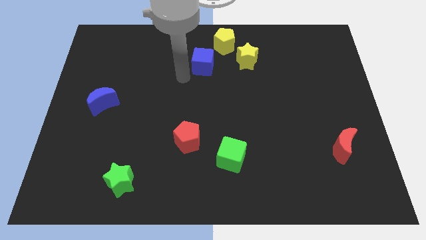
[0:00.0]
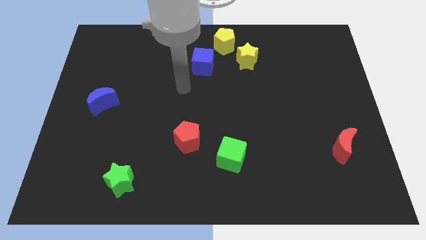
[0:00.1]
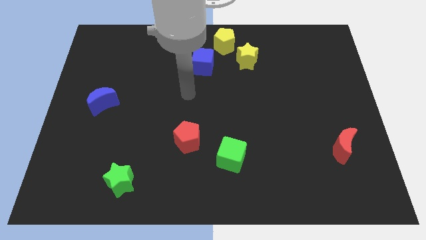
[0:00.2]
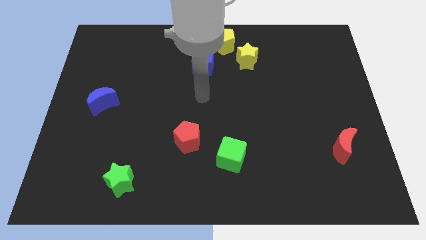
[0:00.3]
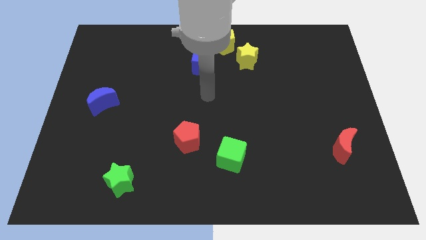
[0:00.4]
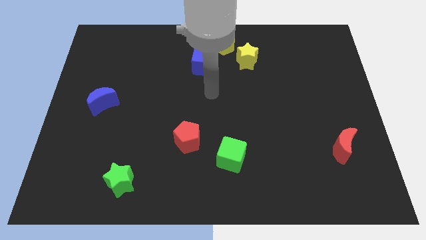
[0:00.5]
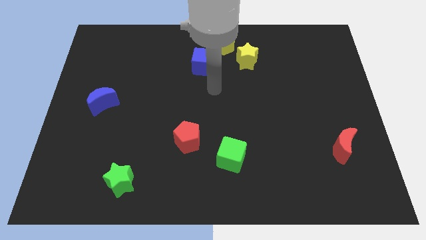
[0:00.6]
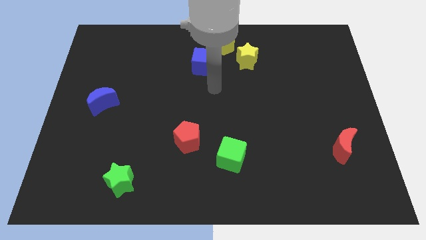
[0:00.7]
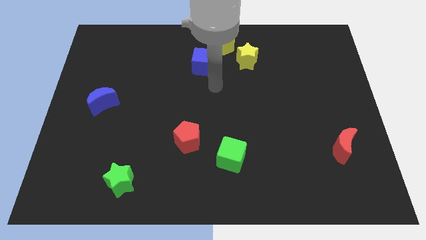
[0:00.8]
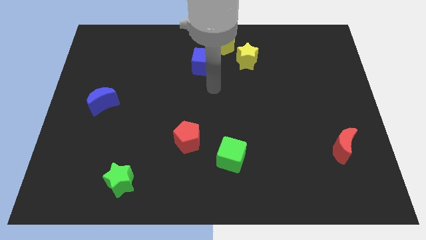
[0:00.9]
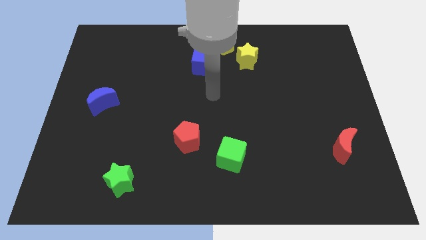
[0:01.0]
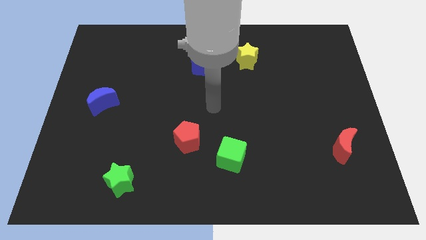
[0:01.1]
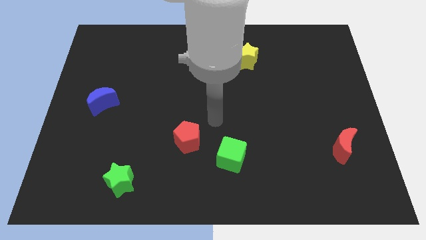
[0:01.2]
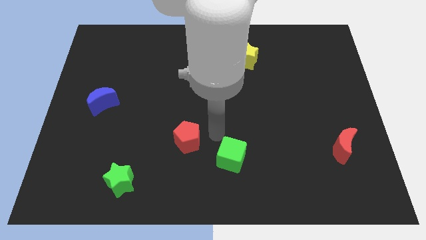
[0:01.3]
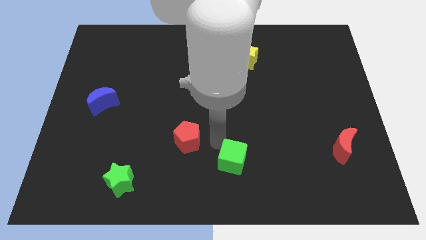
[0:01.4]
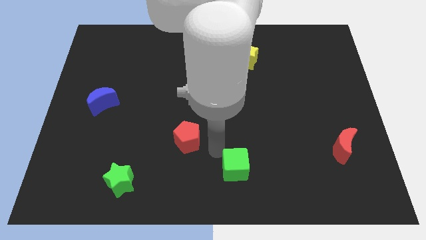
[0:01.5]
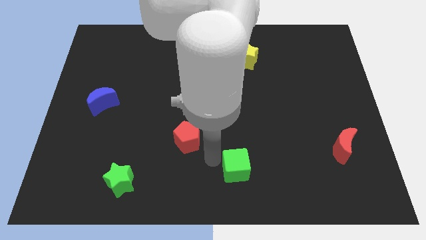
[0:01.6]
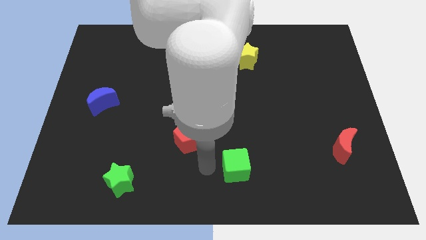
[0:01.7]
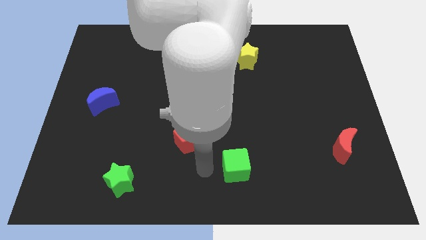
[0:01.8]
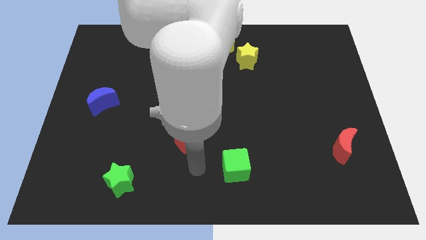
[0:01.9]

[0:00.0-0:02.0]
tap at the left side of the green cube

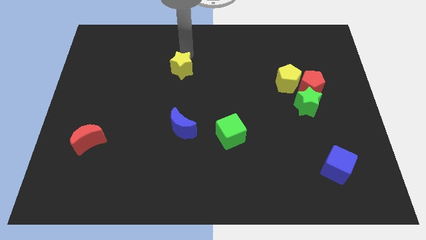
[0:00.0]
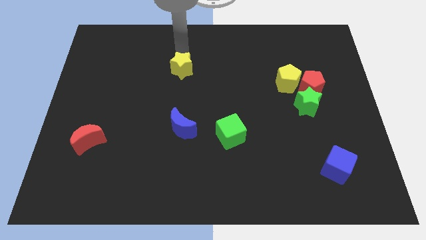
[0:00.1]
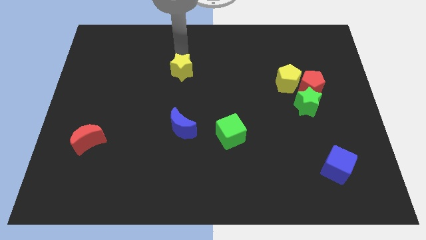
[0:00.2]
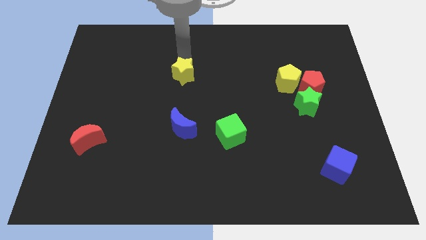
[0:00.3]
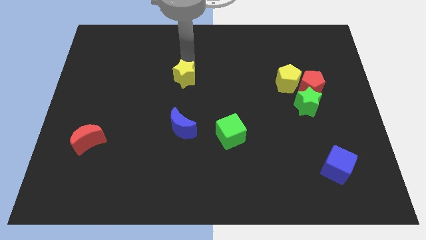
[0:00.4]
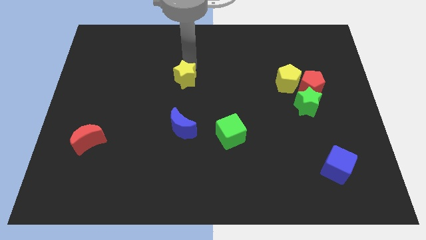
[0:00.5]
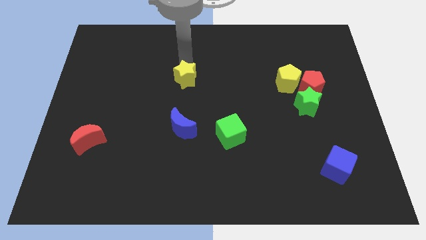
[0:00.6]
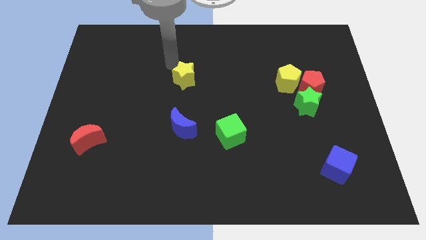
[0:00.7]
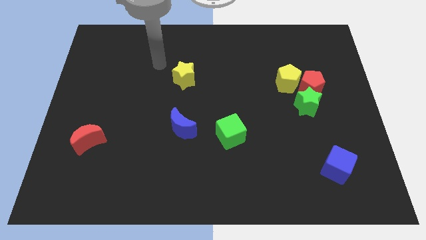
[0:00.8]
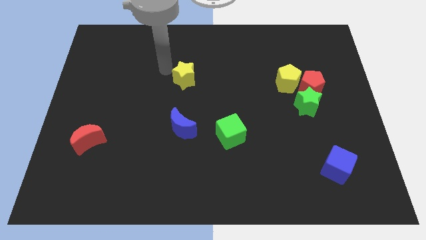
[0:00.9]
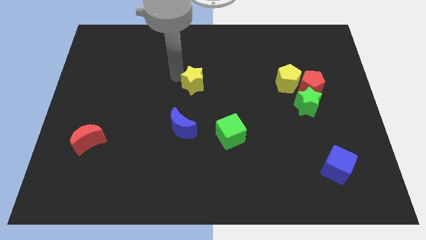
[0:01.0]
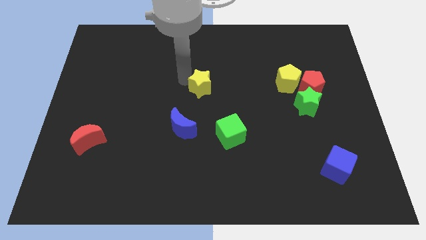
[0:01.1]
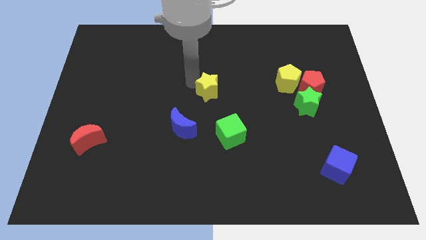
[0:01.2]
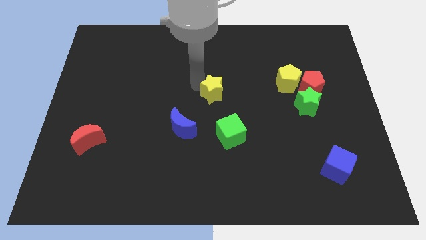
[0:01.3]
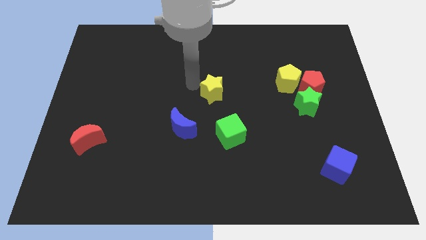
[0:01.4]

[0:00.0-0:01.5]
place the yellow star at the center

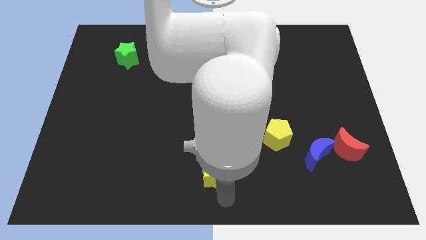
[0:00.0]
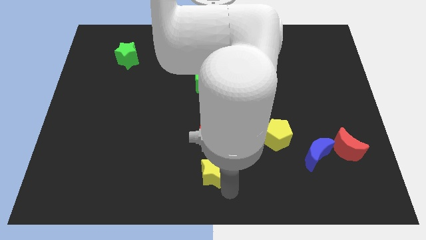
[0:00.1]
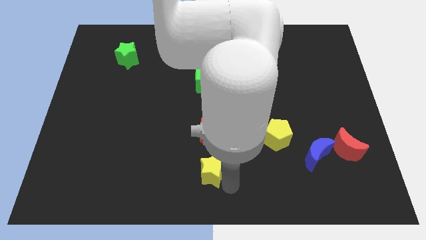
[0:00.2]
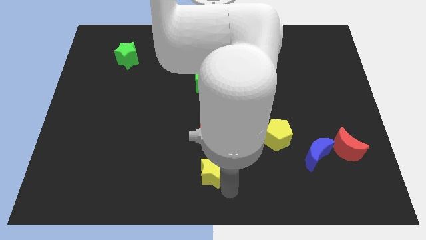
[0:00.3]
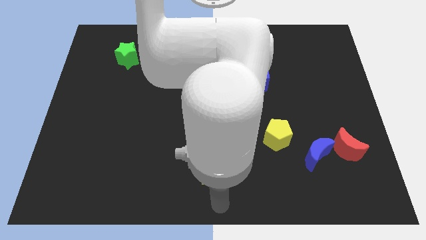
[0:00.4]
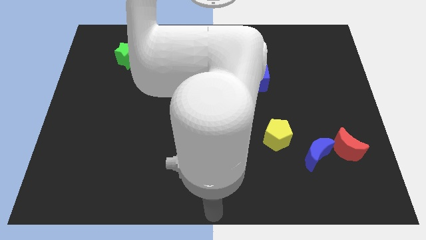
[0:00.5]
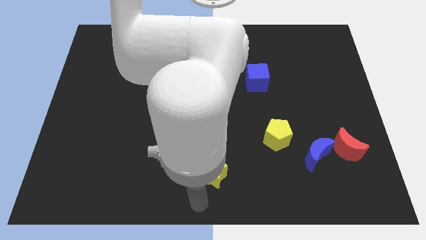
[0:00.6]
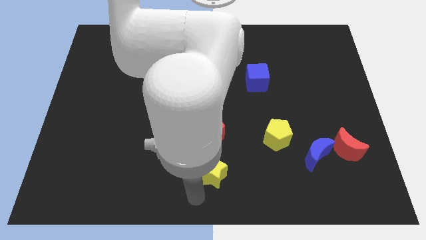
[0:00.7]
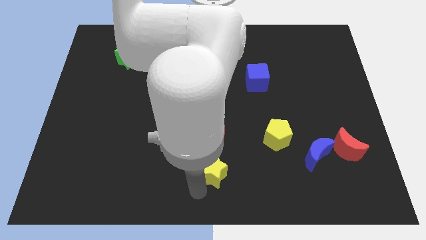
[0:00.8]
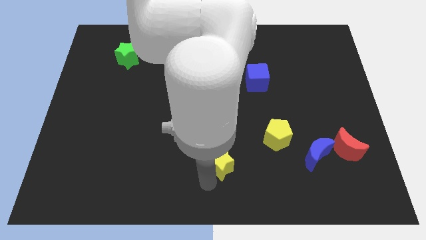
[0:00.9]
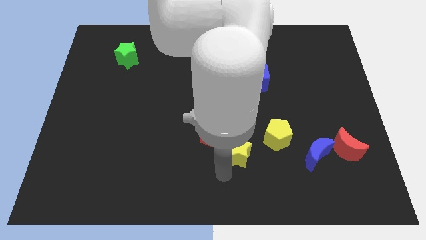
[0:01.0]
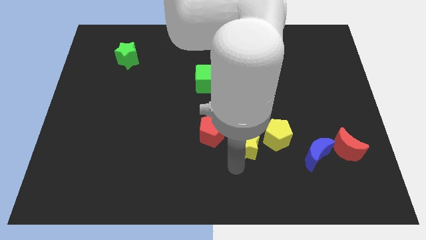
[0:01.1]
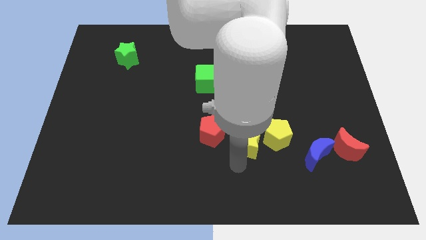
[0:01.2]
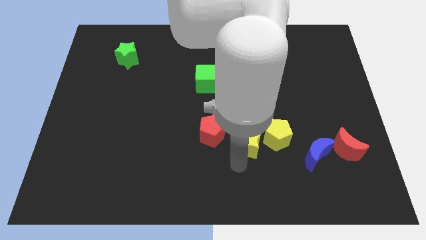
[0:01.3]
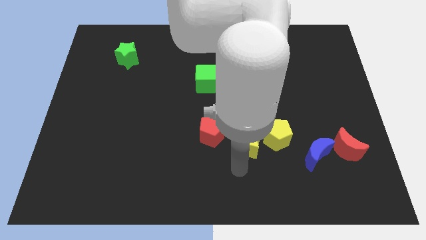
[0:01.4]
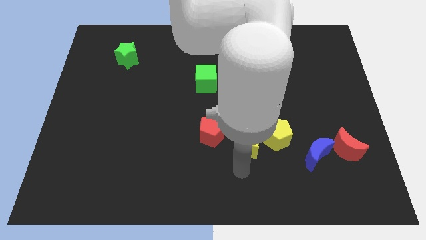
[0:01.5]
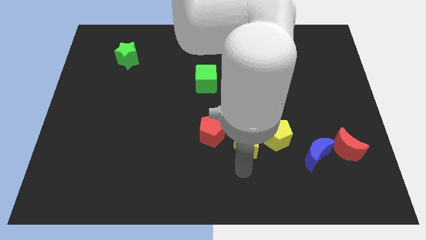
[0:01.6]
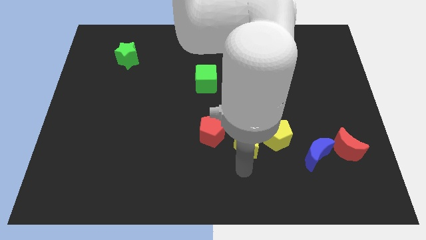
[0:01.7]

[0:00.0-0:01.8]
slide the yellow star close to the yellow pentagon

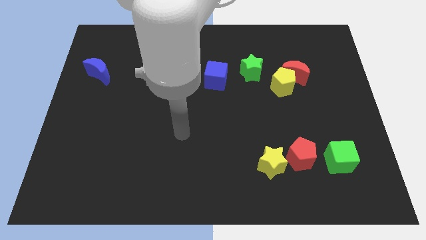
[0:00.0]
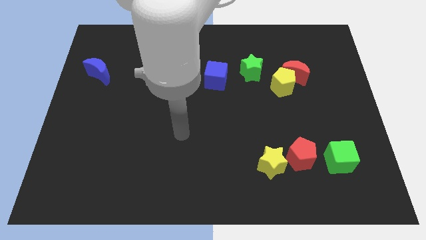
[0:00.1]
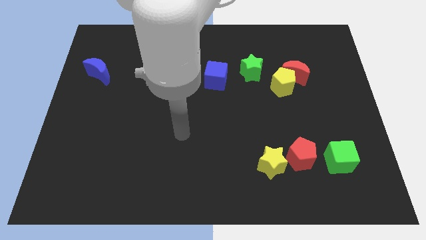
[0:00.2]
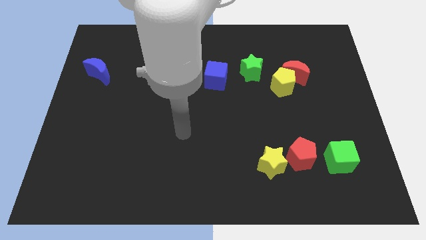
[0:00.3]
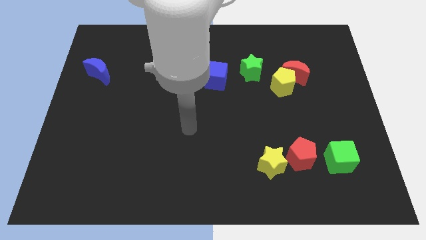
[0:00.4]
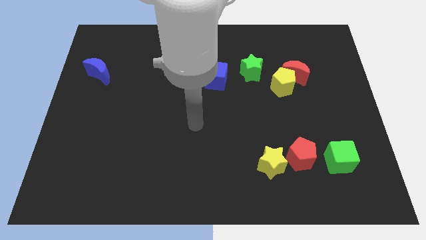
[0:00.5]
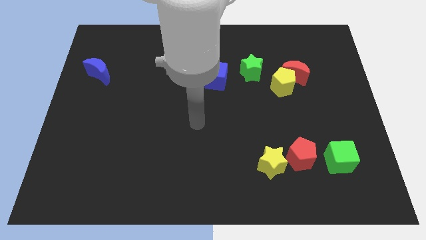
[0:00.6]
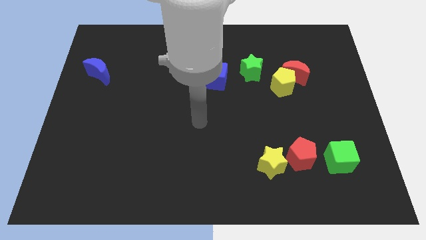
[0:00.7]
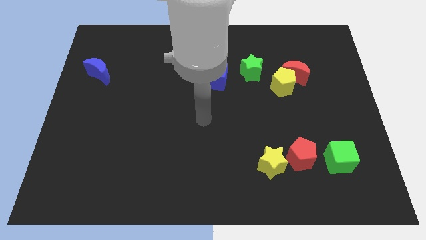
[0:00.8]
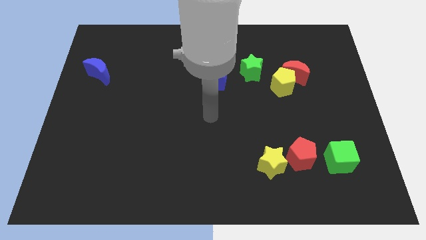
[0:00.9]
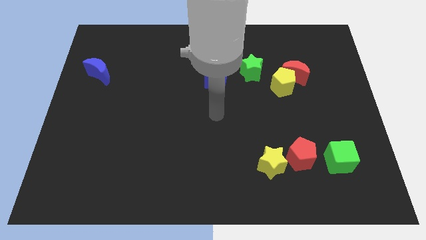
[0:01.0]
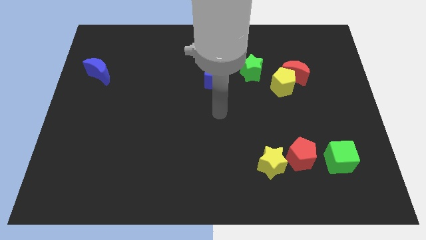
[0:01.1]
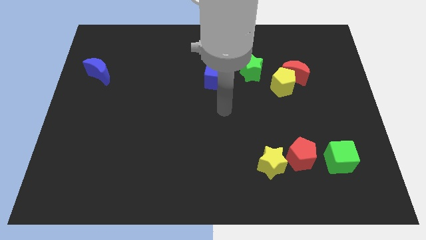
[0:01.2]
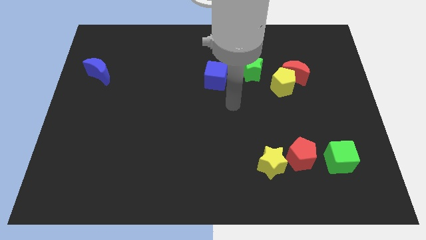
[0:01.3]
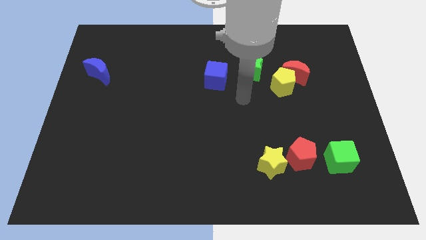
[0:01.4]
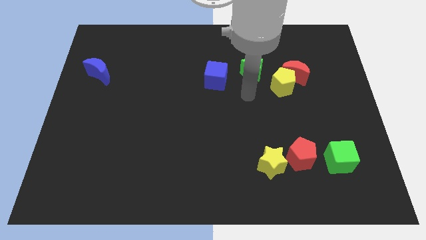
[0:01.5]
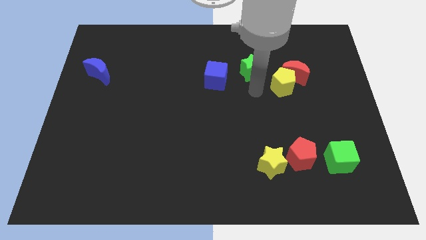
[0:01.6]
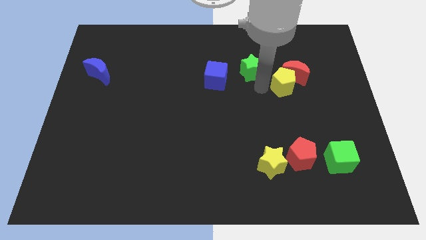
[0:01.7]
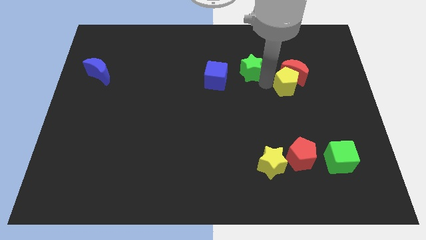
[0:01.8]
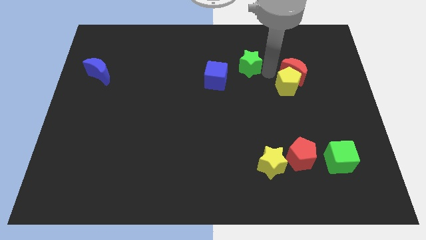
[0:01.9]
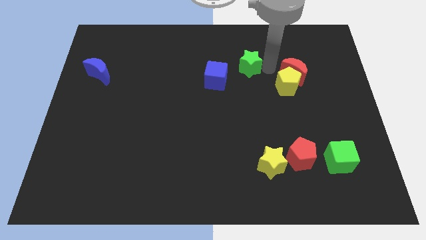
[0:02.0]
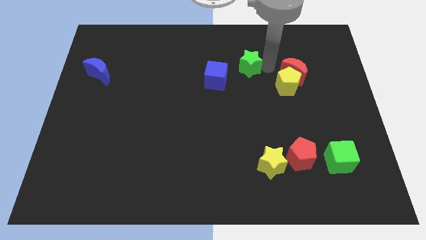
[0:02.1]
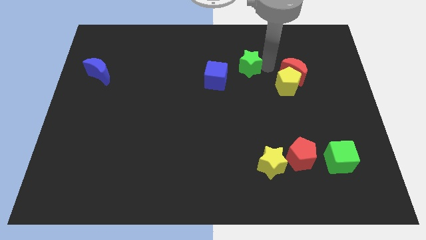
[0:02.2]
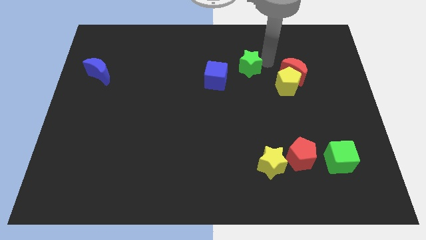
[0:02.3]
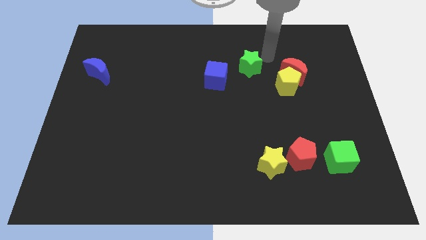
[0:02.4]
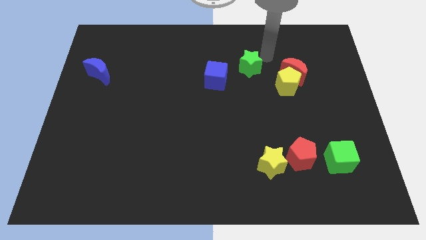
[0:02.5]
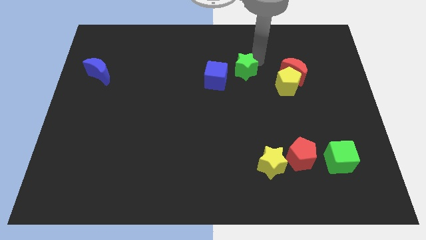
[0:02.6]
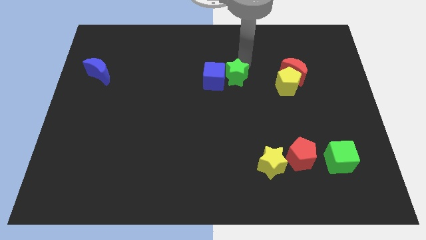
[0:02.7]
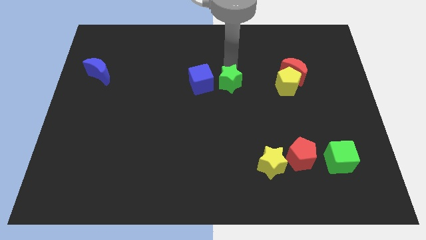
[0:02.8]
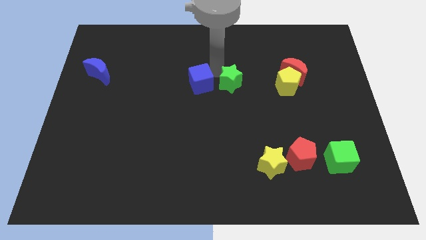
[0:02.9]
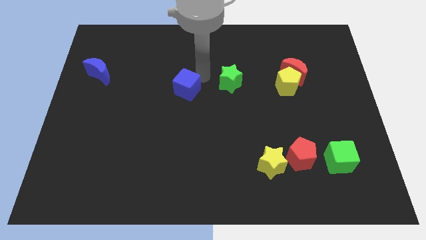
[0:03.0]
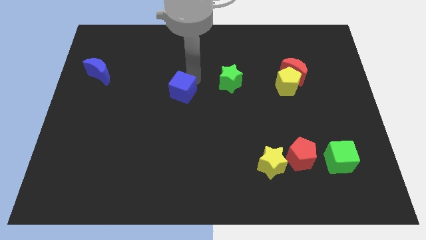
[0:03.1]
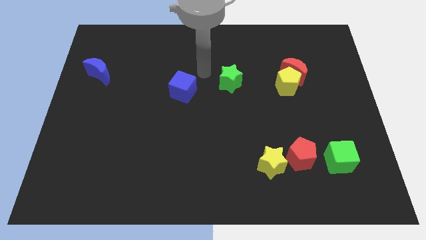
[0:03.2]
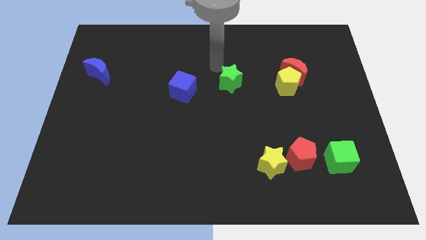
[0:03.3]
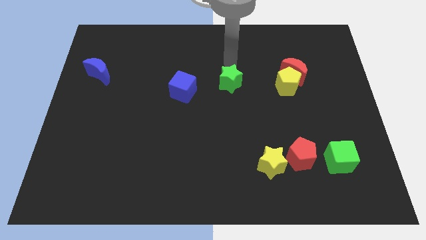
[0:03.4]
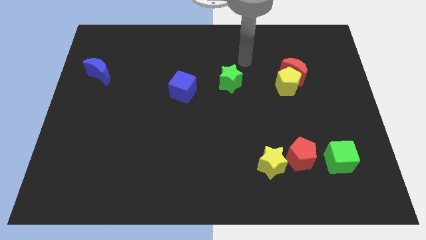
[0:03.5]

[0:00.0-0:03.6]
move the green star and the blue cube towards the center of the board
